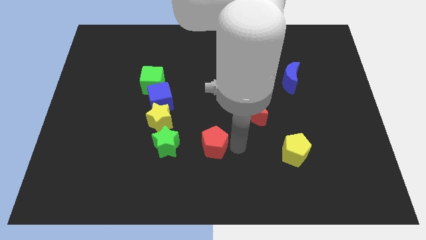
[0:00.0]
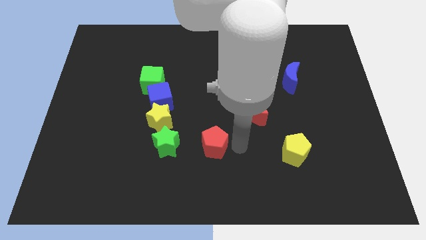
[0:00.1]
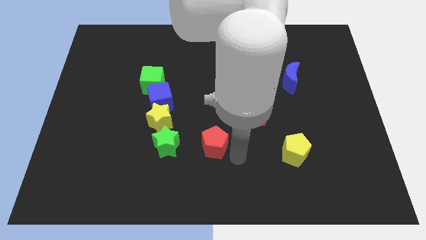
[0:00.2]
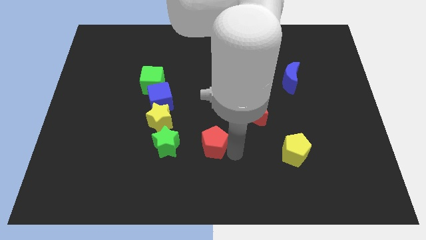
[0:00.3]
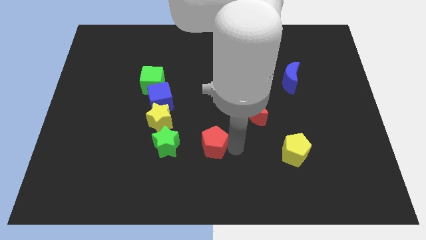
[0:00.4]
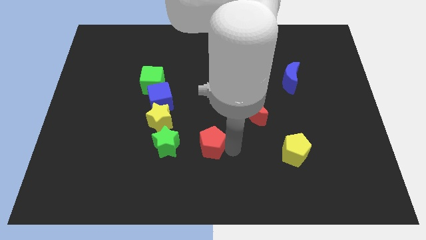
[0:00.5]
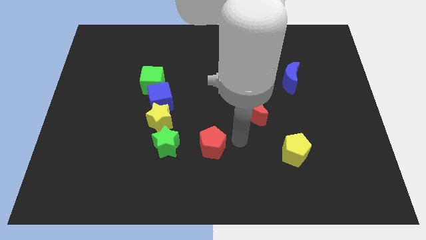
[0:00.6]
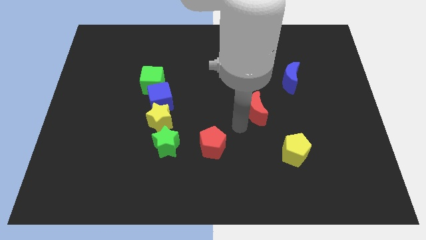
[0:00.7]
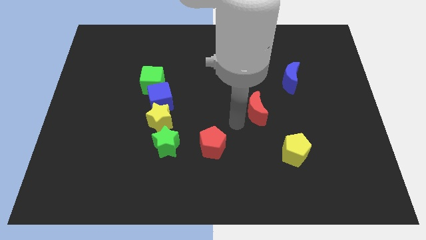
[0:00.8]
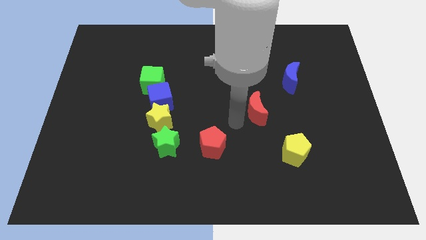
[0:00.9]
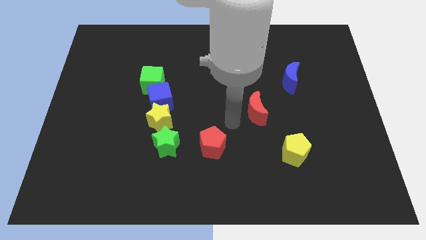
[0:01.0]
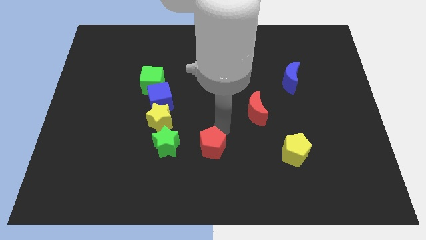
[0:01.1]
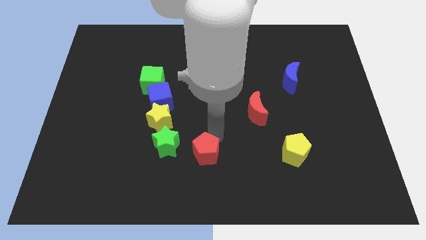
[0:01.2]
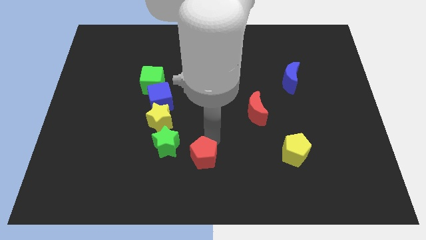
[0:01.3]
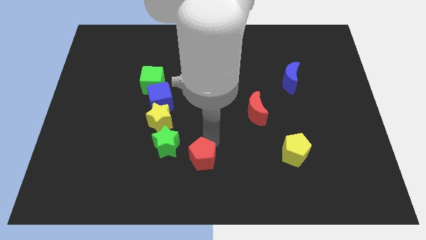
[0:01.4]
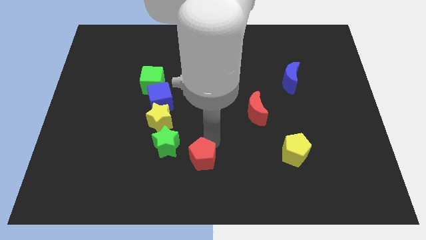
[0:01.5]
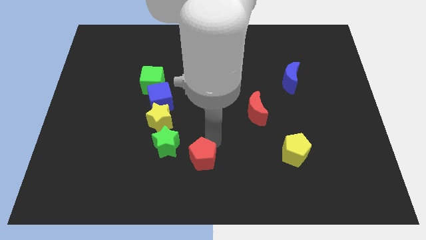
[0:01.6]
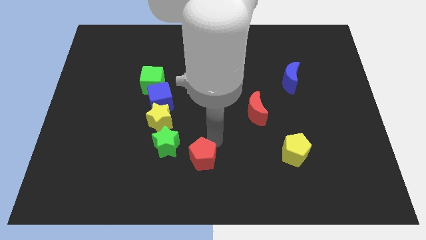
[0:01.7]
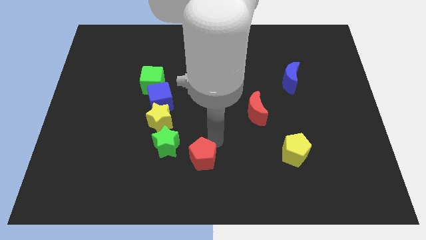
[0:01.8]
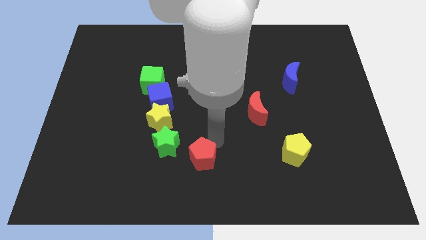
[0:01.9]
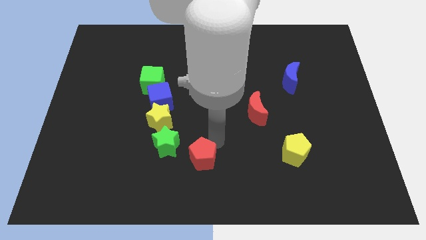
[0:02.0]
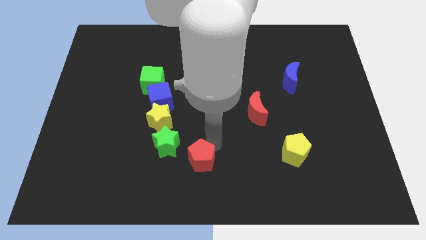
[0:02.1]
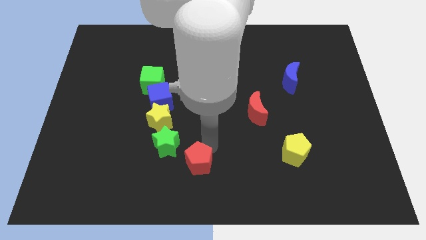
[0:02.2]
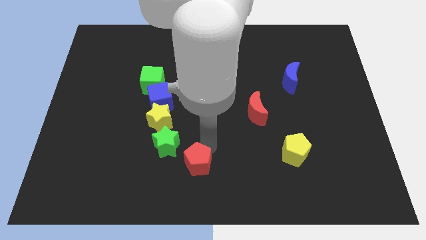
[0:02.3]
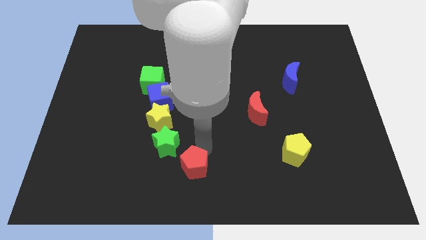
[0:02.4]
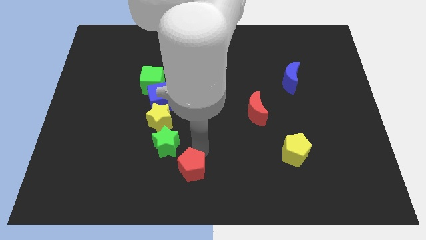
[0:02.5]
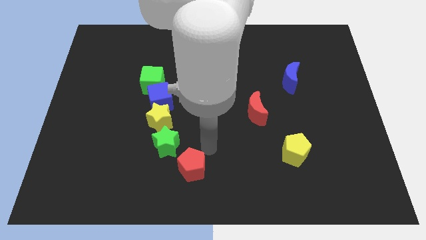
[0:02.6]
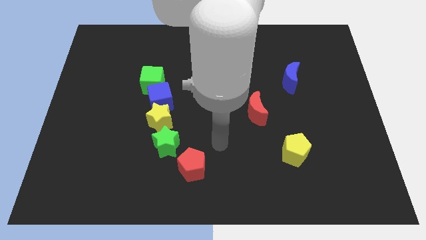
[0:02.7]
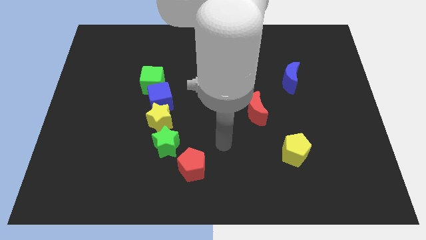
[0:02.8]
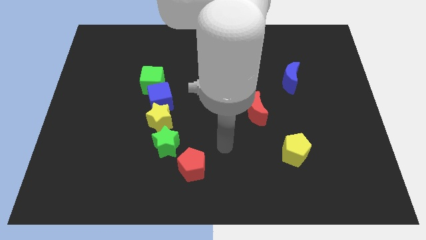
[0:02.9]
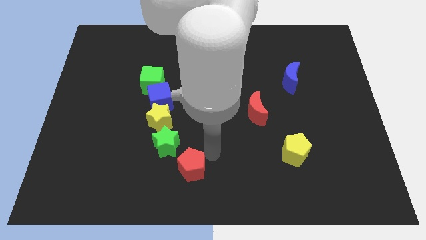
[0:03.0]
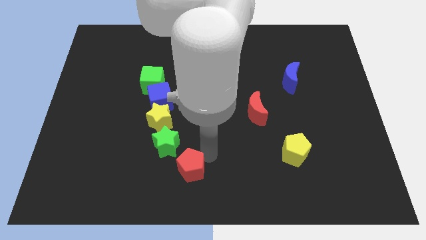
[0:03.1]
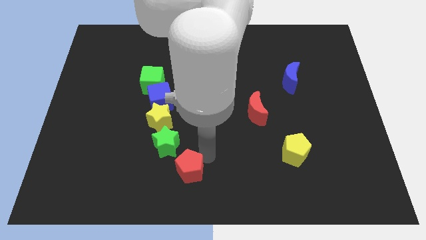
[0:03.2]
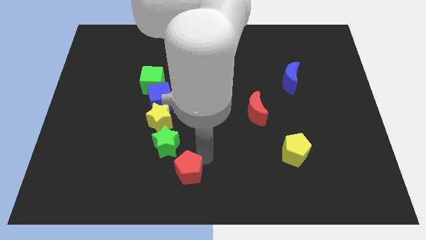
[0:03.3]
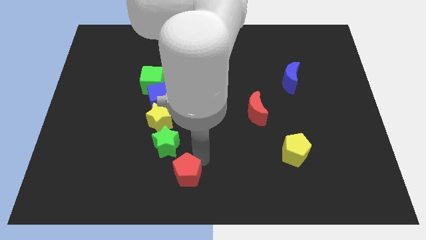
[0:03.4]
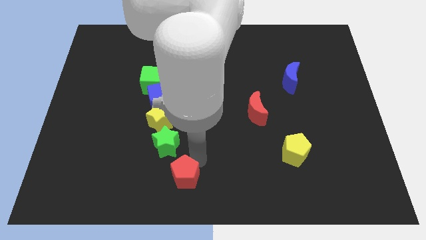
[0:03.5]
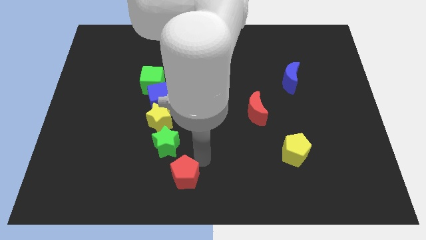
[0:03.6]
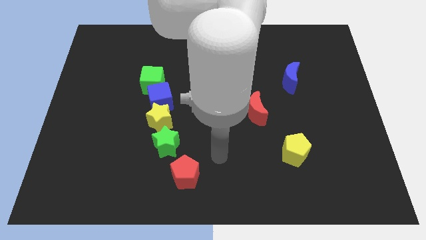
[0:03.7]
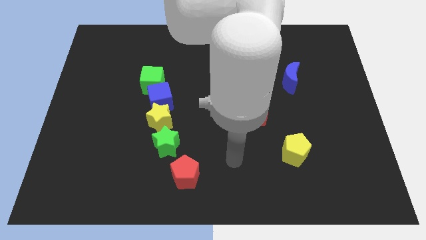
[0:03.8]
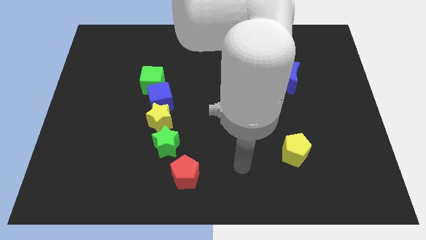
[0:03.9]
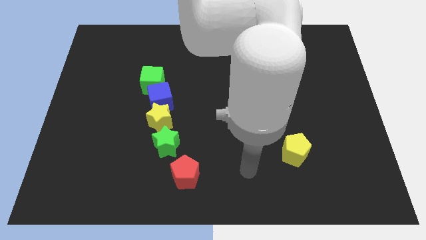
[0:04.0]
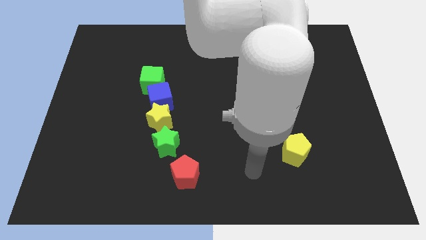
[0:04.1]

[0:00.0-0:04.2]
move the red pentagon diagonally below the green star

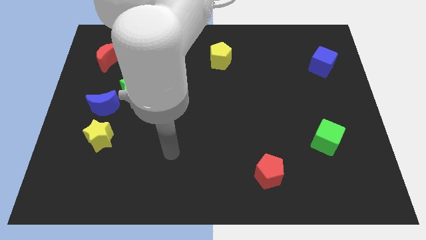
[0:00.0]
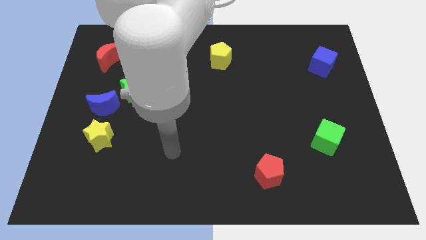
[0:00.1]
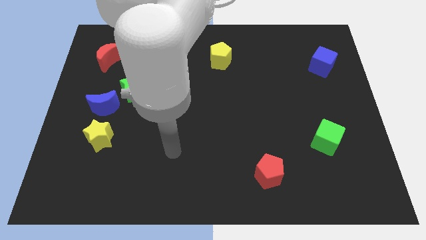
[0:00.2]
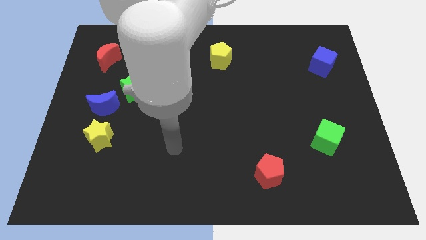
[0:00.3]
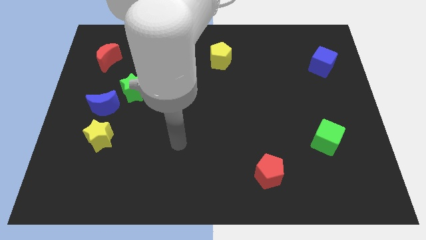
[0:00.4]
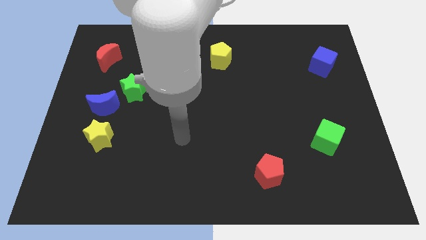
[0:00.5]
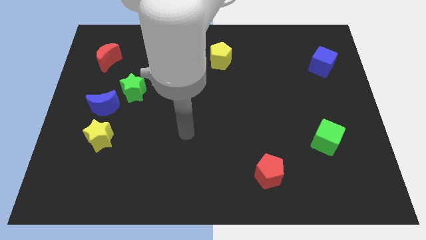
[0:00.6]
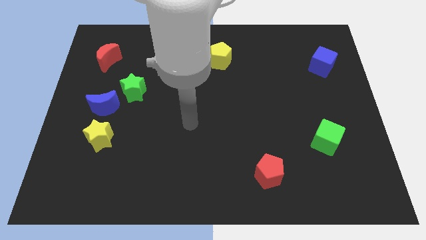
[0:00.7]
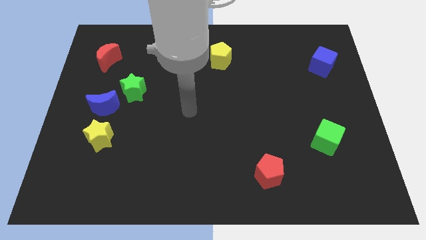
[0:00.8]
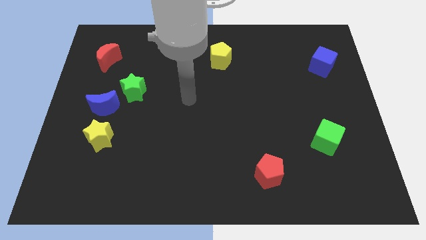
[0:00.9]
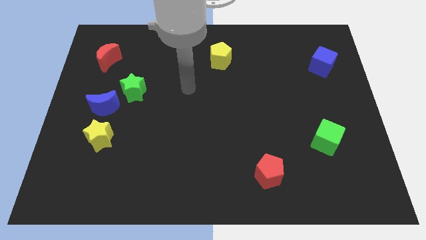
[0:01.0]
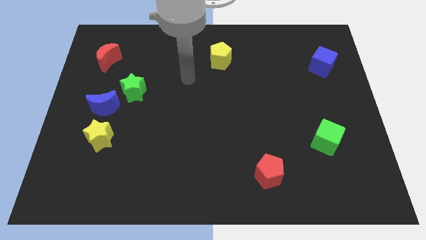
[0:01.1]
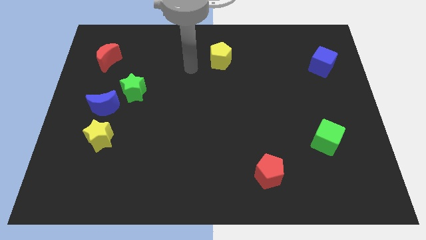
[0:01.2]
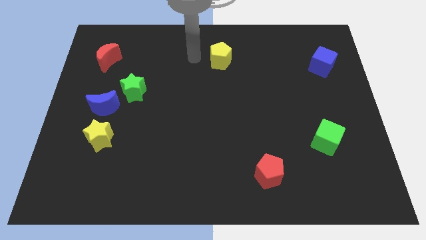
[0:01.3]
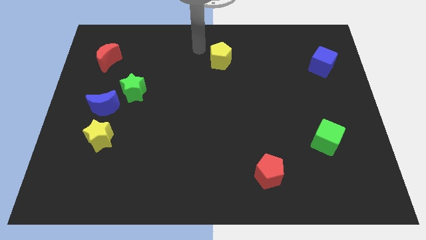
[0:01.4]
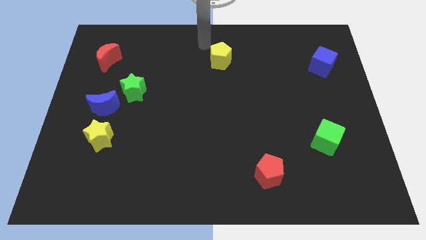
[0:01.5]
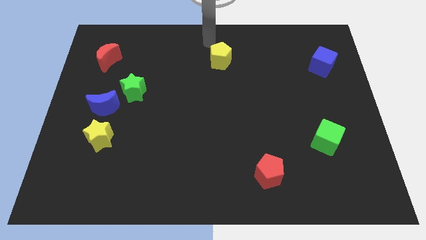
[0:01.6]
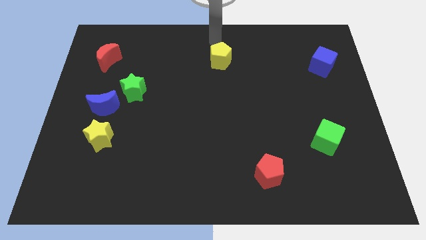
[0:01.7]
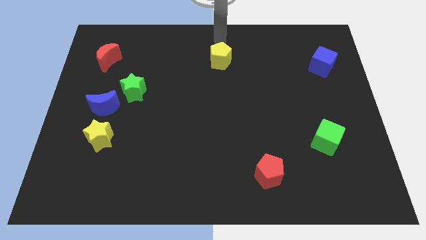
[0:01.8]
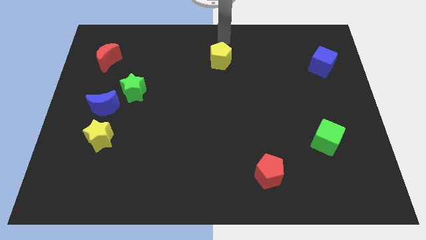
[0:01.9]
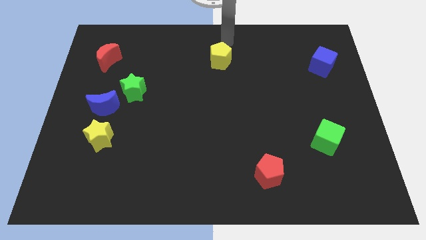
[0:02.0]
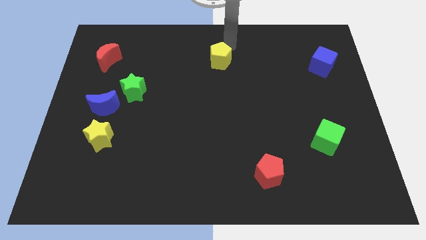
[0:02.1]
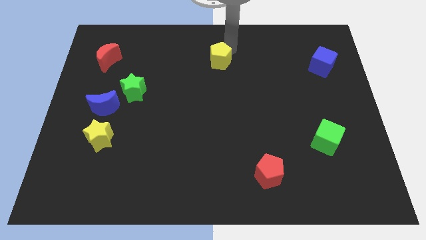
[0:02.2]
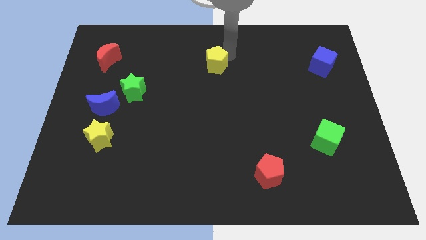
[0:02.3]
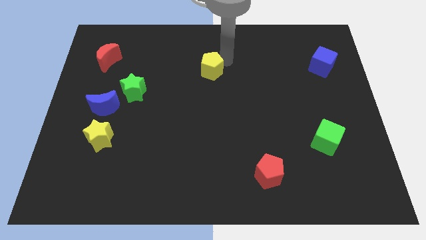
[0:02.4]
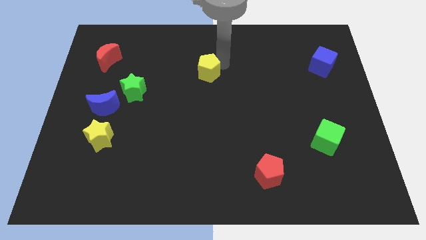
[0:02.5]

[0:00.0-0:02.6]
place your arm above the yellow pentagon

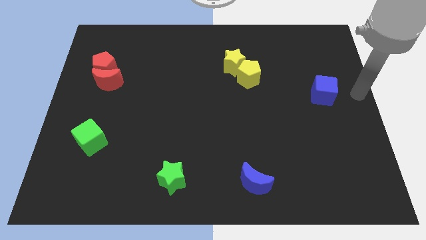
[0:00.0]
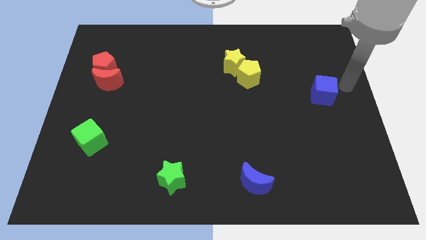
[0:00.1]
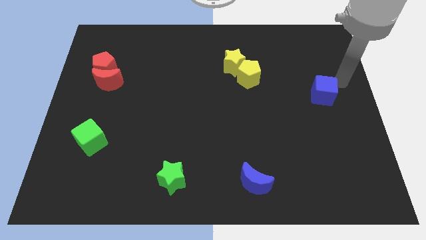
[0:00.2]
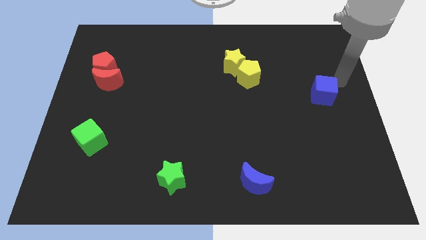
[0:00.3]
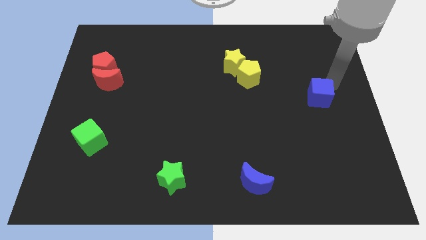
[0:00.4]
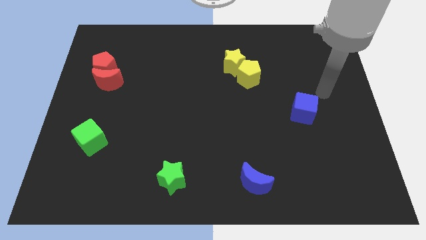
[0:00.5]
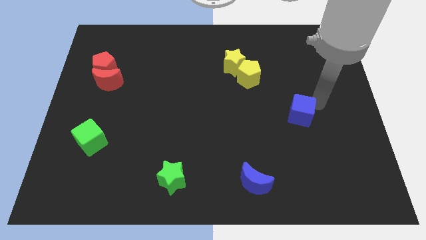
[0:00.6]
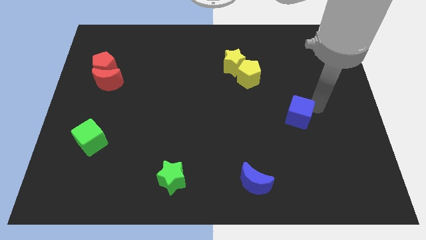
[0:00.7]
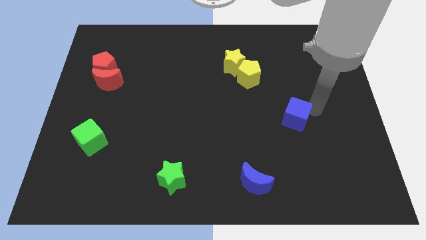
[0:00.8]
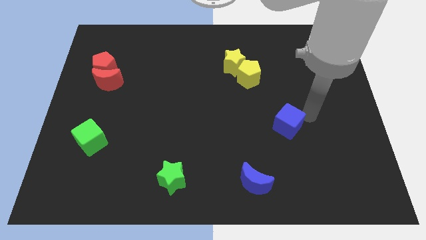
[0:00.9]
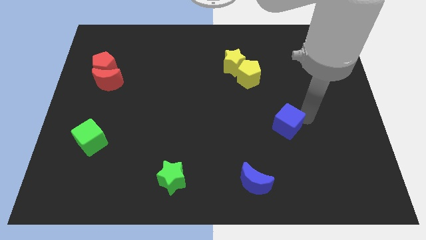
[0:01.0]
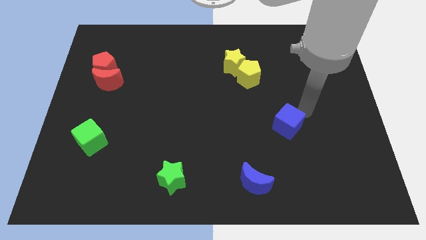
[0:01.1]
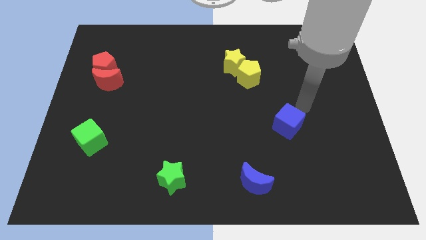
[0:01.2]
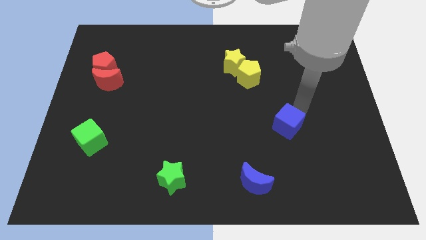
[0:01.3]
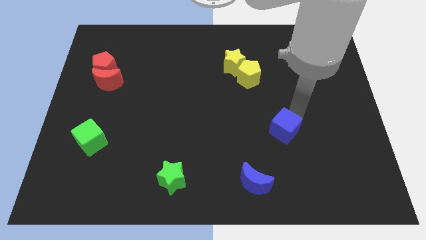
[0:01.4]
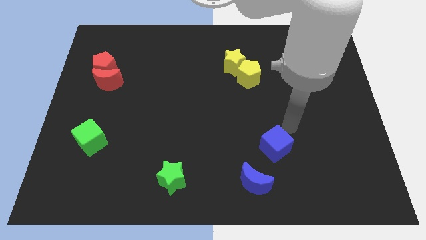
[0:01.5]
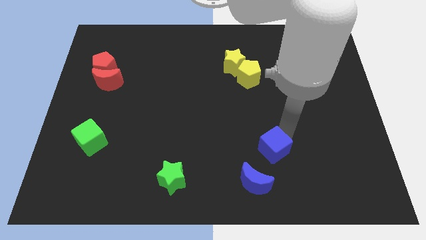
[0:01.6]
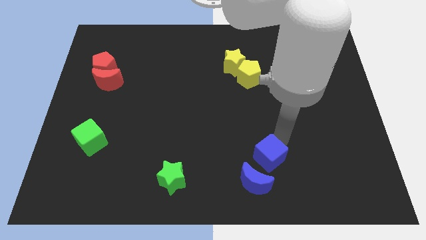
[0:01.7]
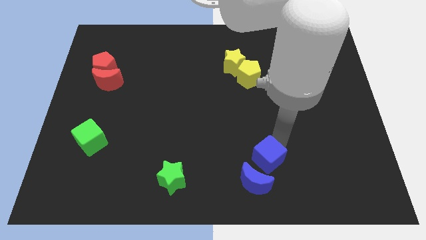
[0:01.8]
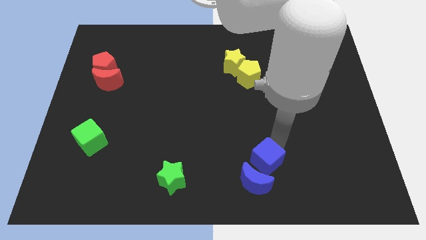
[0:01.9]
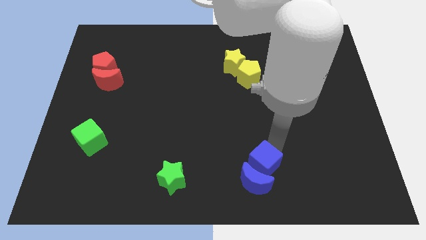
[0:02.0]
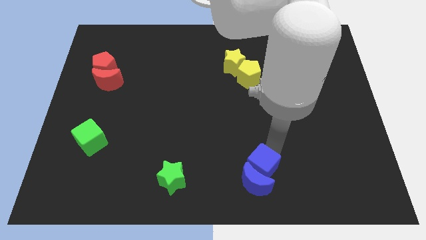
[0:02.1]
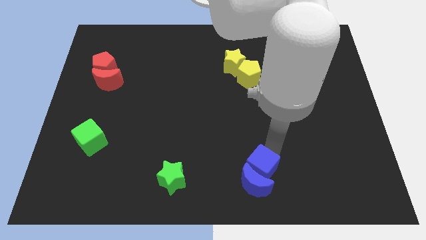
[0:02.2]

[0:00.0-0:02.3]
attach the blue cube to the blue moon
